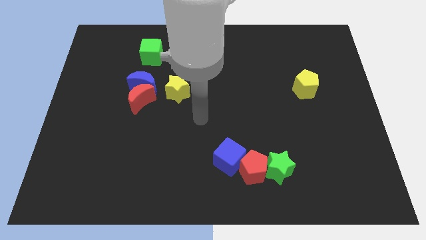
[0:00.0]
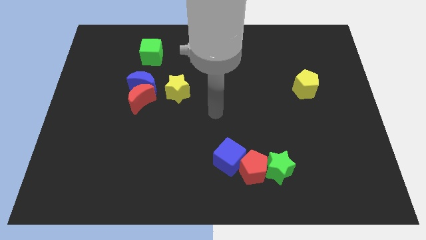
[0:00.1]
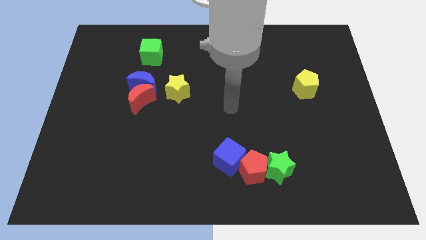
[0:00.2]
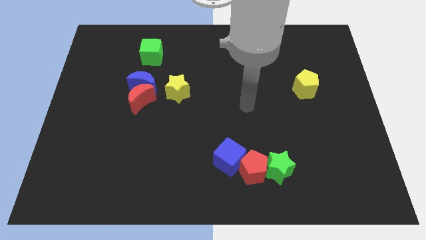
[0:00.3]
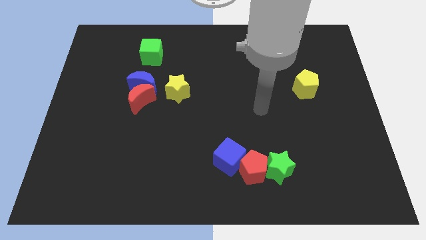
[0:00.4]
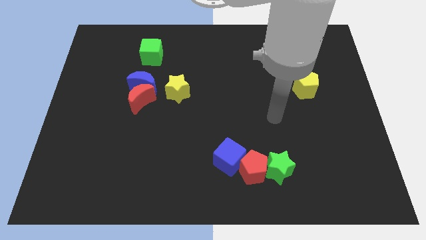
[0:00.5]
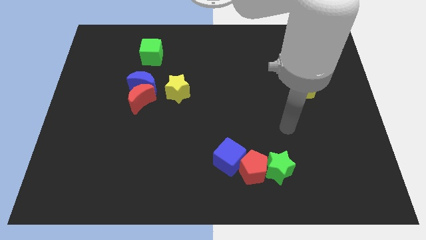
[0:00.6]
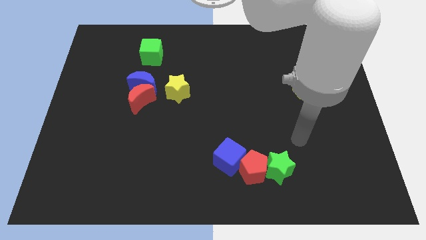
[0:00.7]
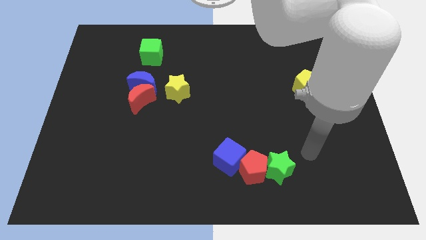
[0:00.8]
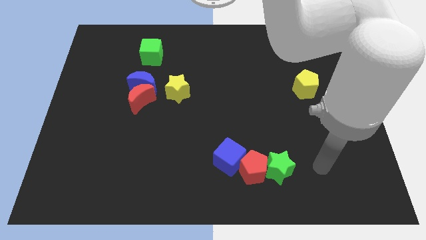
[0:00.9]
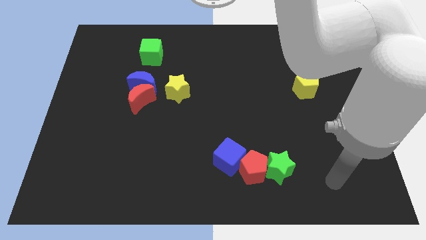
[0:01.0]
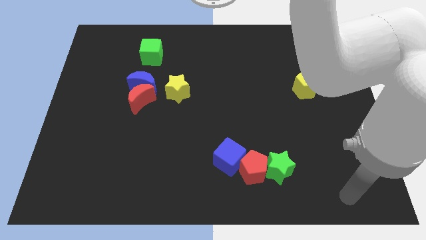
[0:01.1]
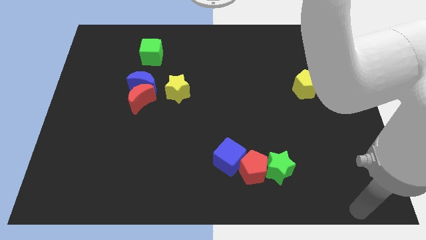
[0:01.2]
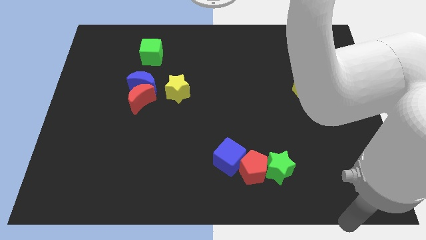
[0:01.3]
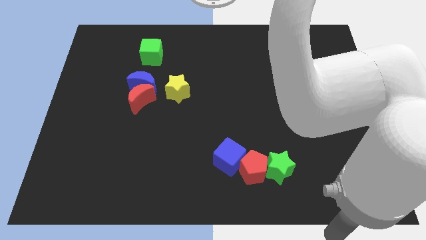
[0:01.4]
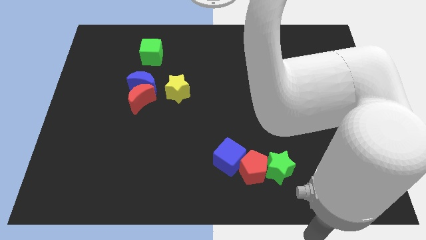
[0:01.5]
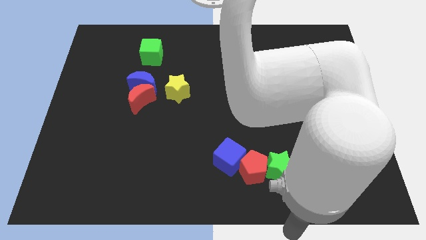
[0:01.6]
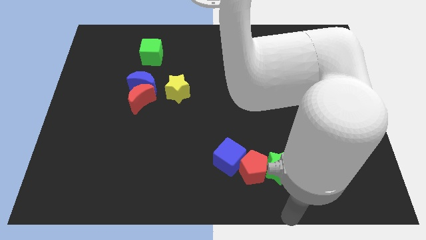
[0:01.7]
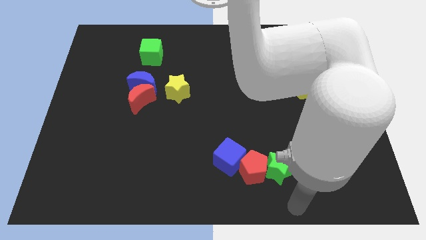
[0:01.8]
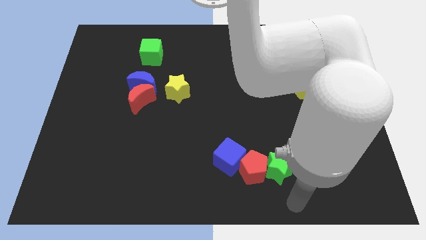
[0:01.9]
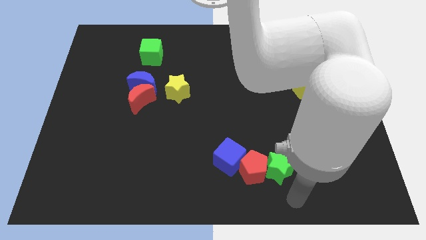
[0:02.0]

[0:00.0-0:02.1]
place the pointer at the bottom of the green star

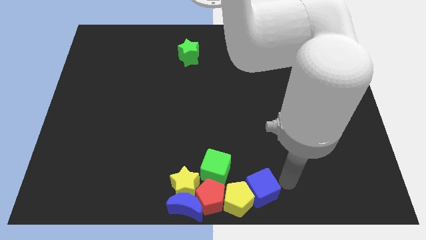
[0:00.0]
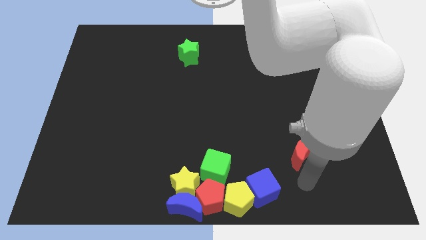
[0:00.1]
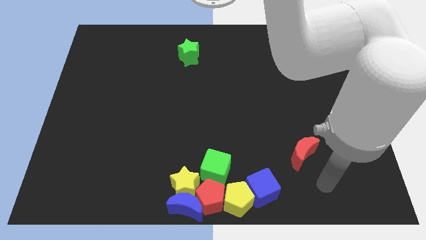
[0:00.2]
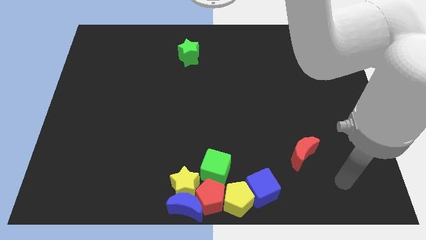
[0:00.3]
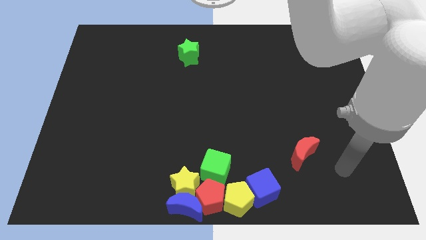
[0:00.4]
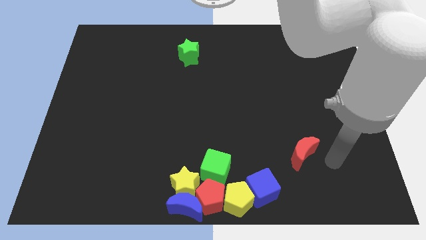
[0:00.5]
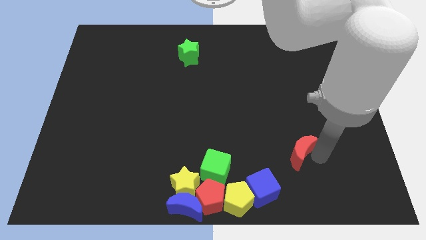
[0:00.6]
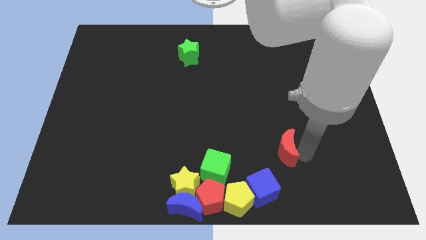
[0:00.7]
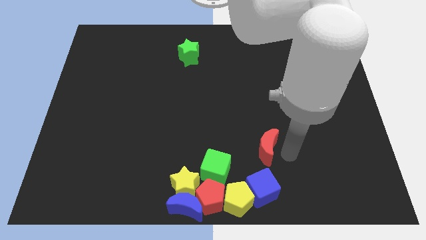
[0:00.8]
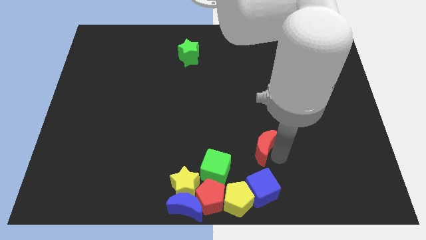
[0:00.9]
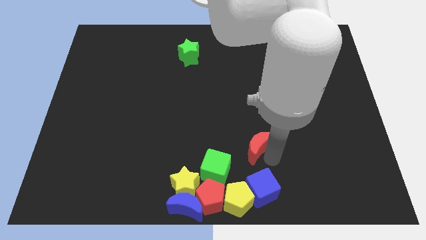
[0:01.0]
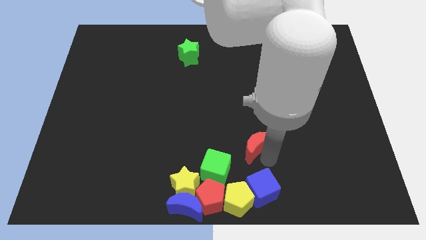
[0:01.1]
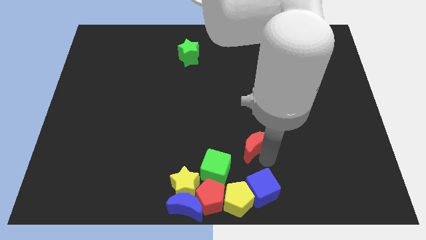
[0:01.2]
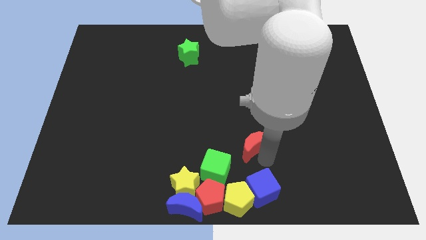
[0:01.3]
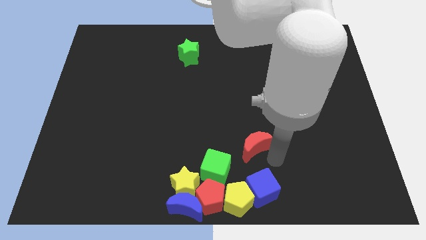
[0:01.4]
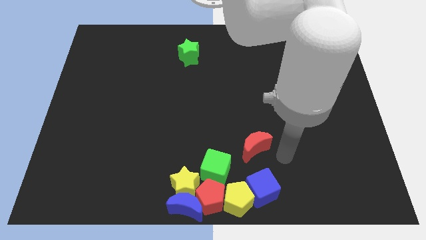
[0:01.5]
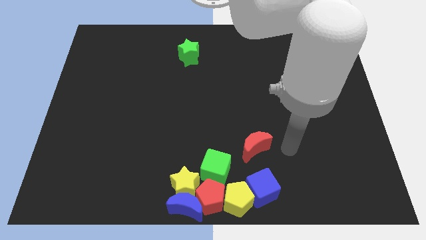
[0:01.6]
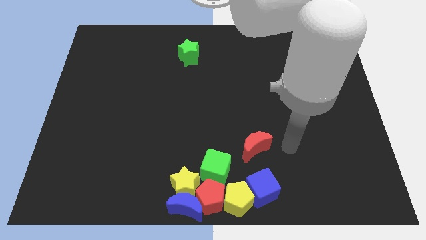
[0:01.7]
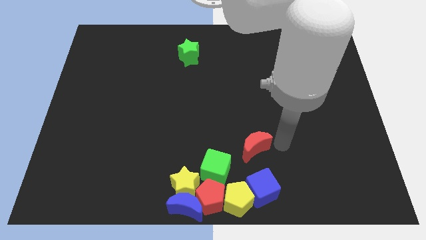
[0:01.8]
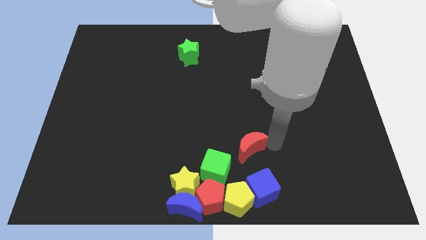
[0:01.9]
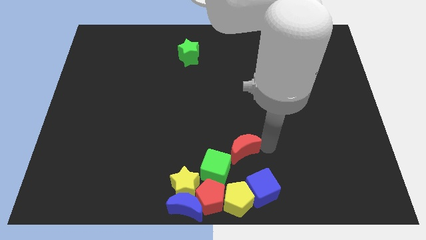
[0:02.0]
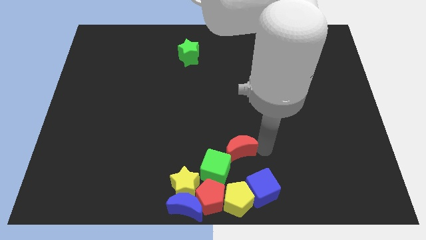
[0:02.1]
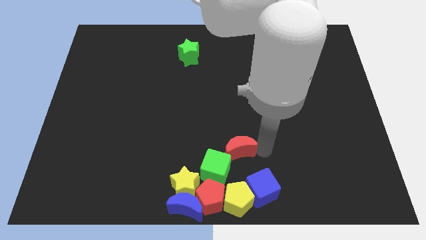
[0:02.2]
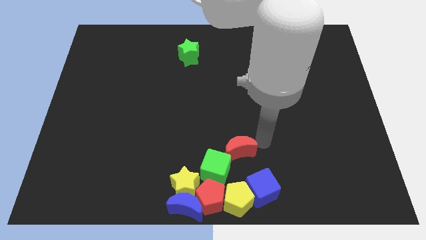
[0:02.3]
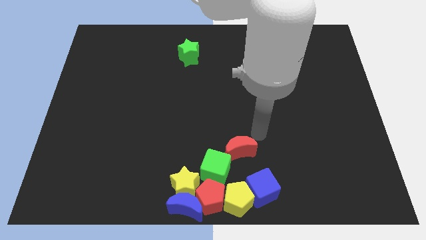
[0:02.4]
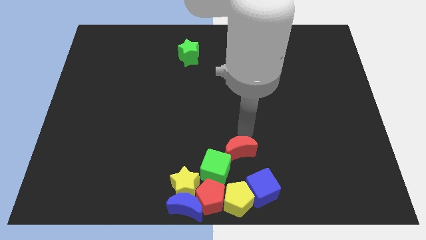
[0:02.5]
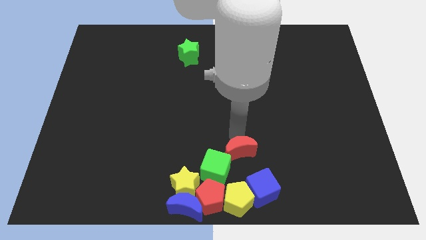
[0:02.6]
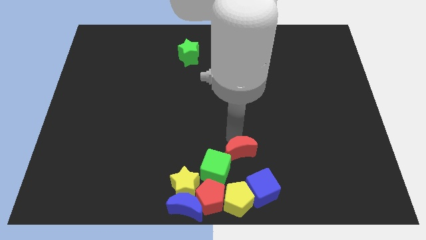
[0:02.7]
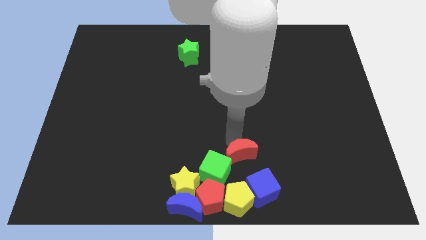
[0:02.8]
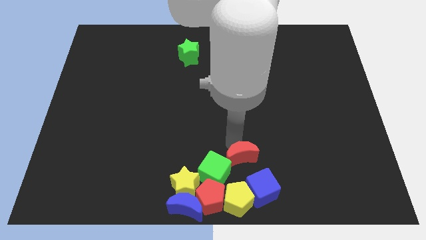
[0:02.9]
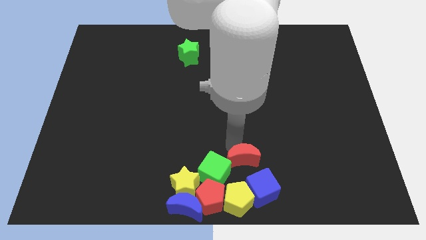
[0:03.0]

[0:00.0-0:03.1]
put the red moon at the top right side of green cube

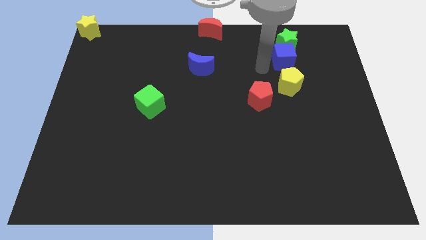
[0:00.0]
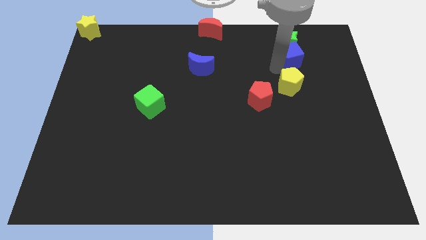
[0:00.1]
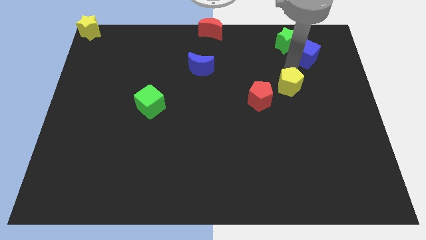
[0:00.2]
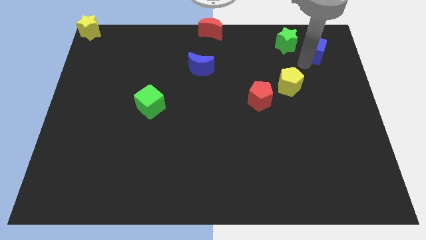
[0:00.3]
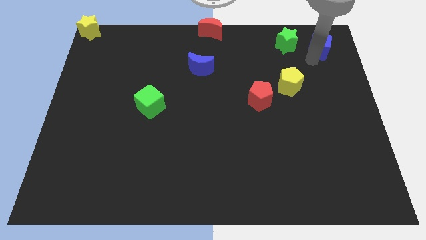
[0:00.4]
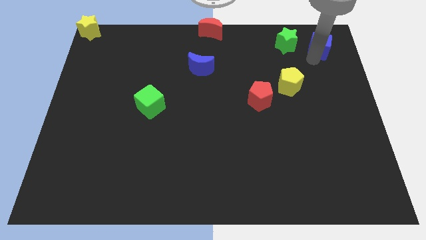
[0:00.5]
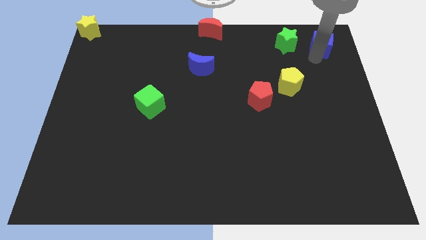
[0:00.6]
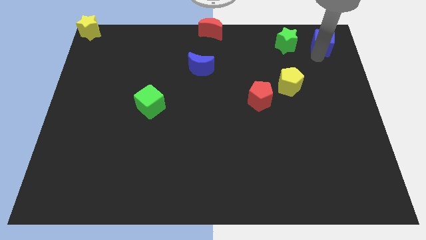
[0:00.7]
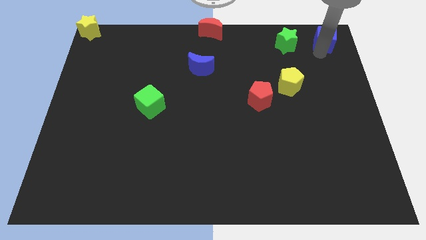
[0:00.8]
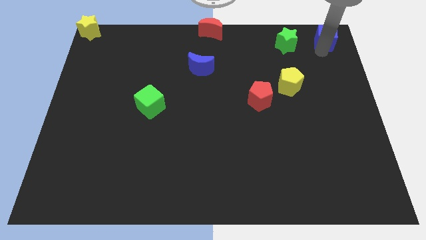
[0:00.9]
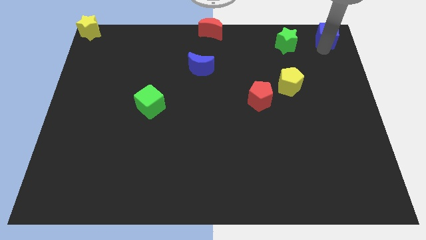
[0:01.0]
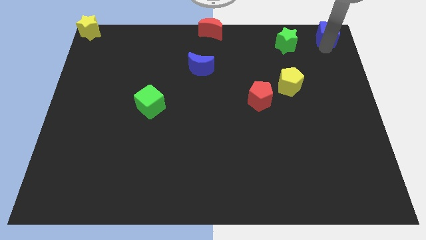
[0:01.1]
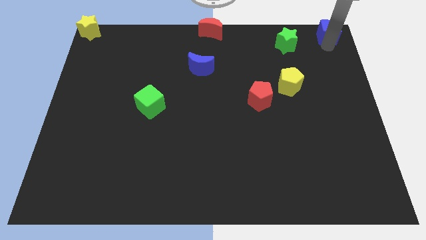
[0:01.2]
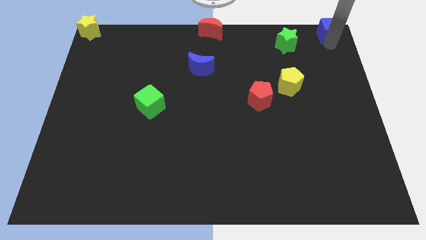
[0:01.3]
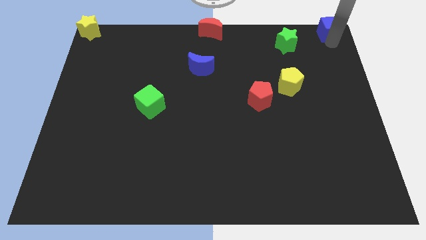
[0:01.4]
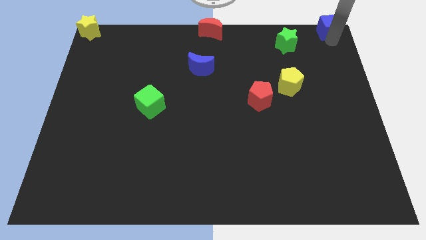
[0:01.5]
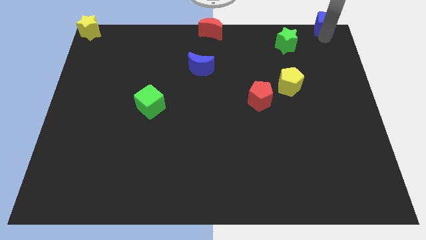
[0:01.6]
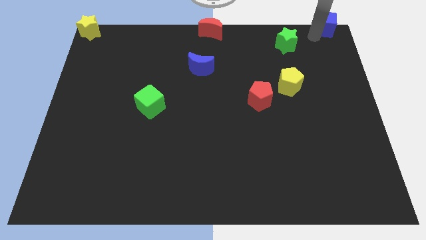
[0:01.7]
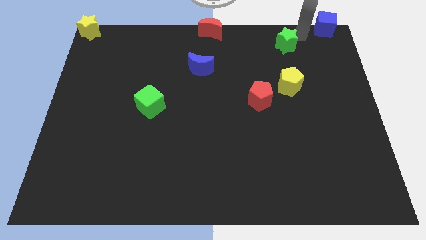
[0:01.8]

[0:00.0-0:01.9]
separate the blue cube from the green star

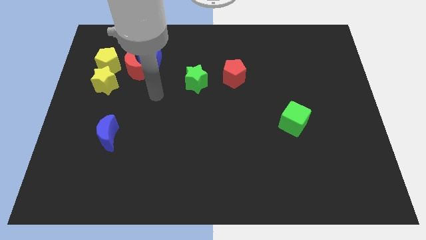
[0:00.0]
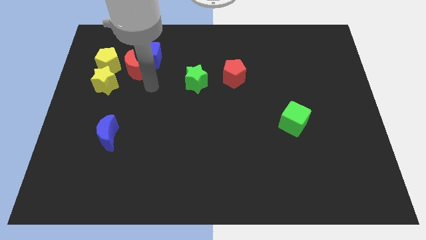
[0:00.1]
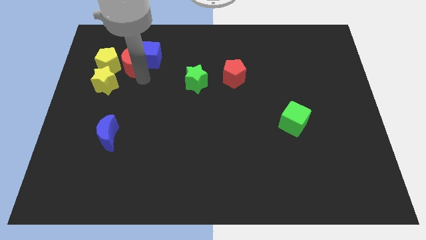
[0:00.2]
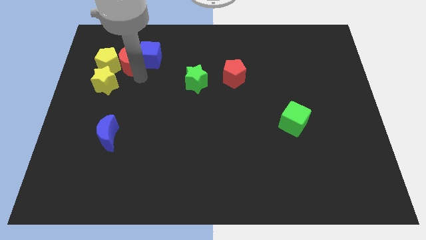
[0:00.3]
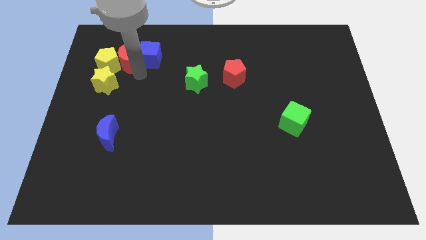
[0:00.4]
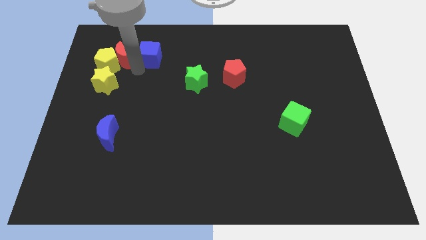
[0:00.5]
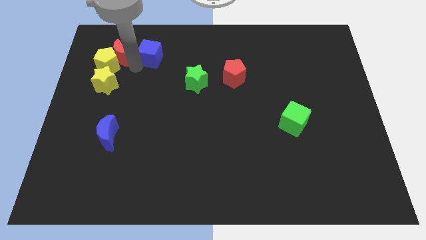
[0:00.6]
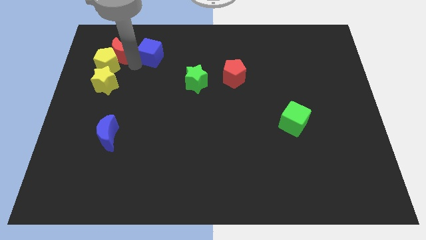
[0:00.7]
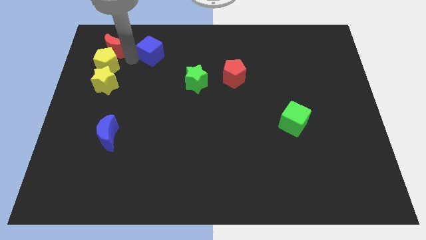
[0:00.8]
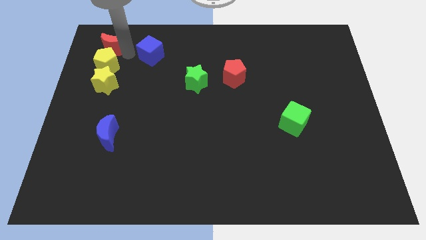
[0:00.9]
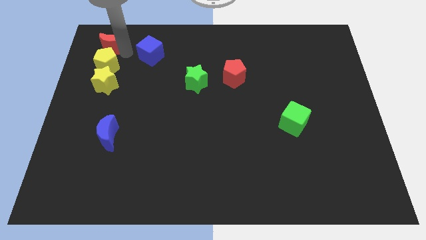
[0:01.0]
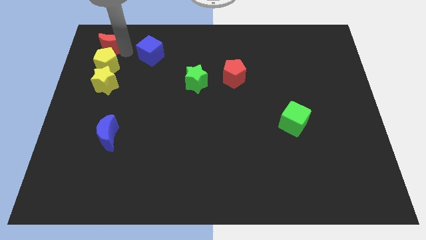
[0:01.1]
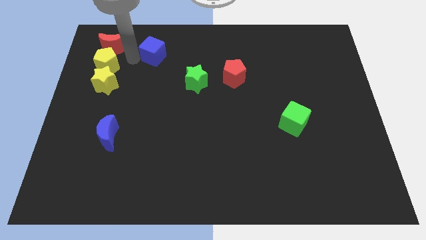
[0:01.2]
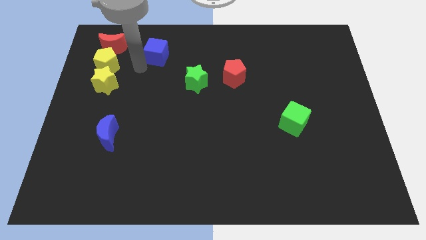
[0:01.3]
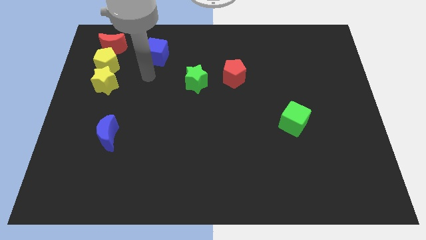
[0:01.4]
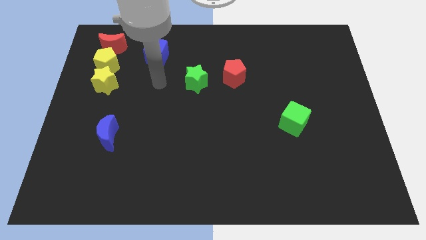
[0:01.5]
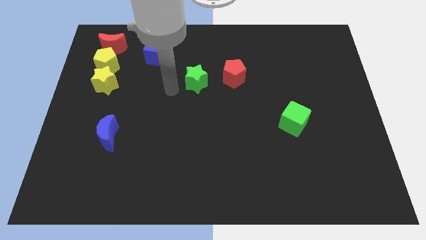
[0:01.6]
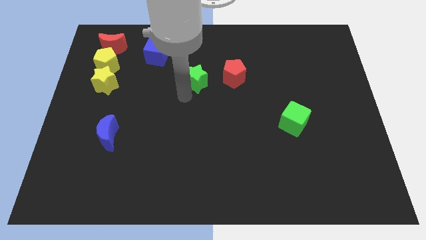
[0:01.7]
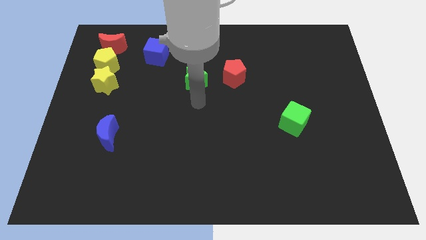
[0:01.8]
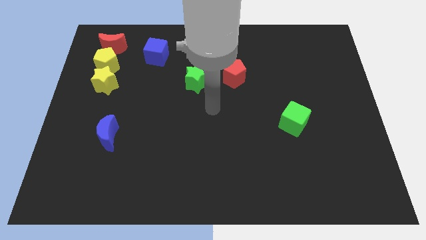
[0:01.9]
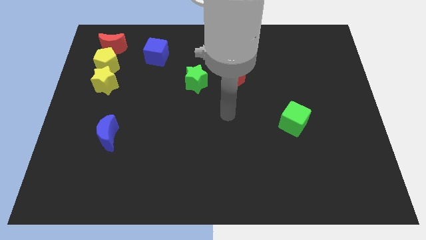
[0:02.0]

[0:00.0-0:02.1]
move the red moon towards the top left corner
